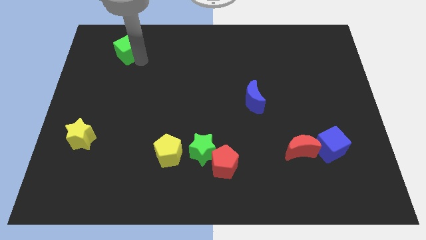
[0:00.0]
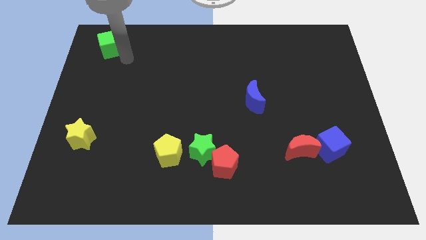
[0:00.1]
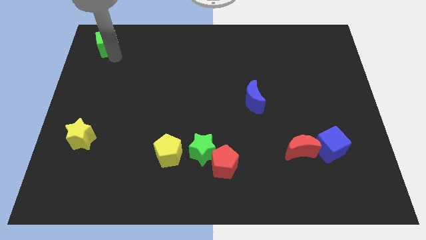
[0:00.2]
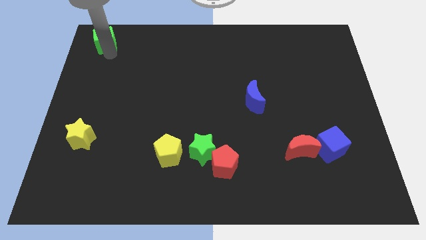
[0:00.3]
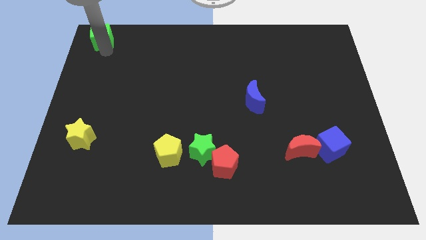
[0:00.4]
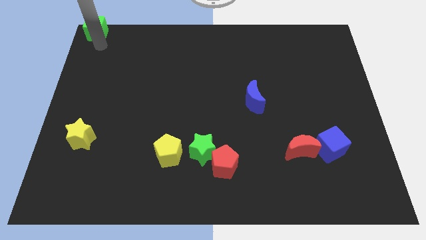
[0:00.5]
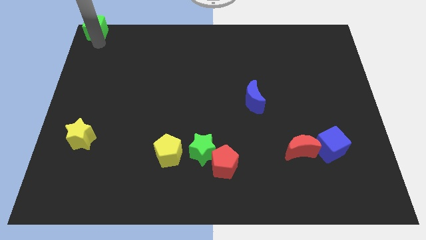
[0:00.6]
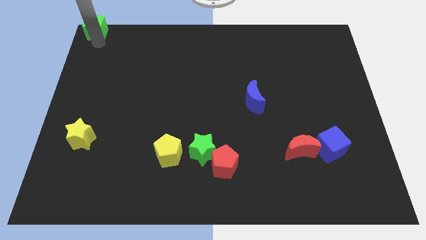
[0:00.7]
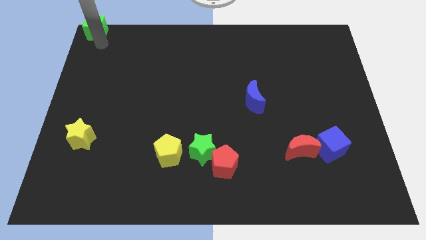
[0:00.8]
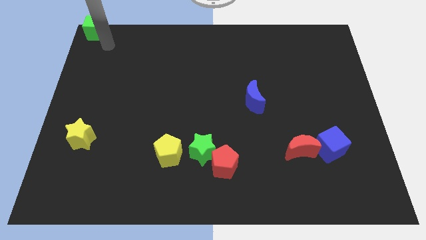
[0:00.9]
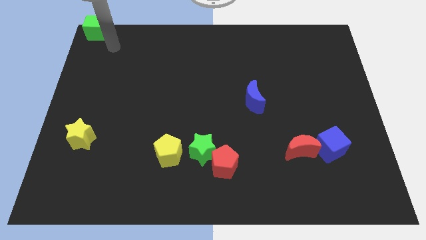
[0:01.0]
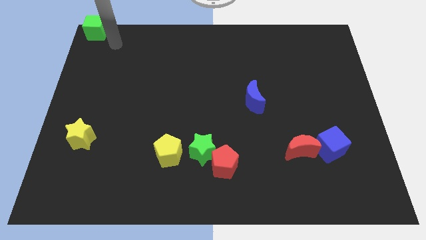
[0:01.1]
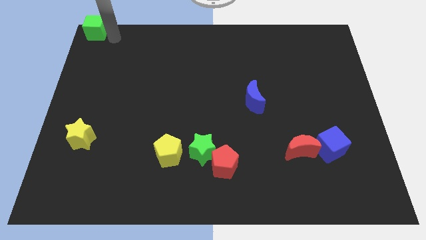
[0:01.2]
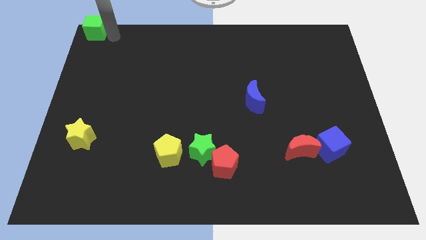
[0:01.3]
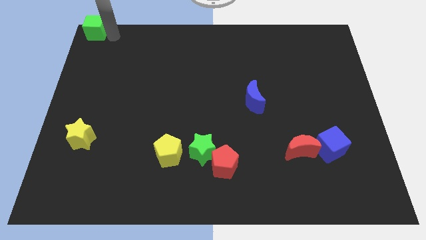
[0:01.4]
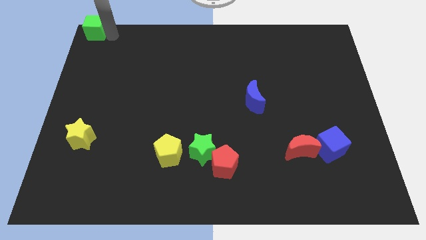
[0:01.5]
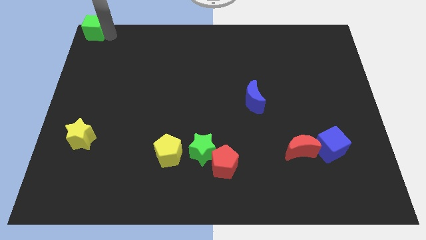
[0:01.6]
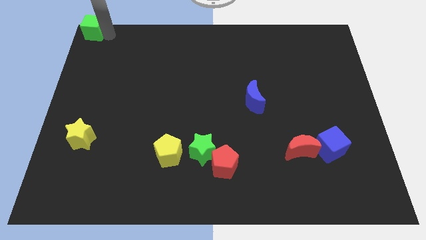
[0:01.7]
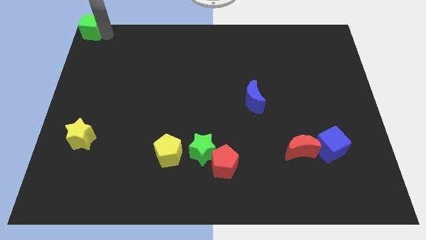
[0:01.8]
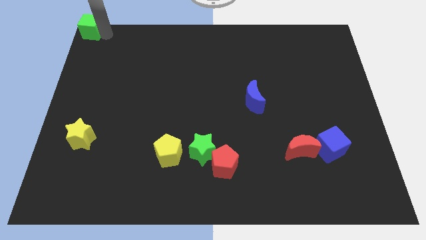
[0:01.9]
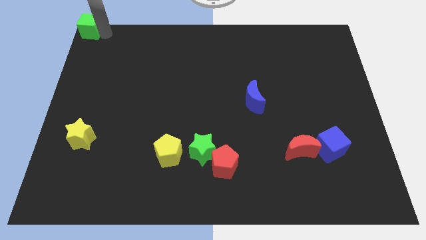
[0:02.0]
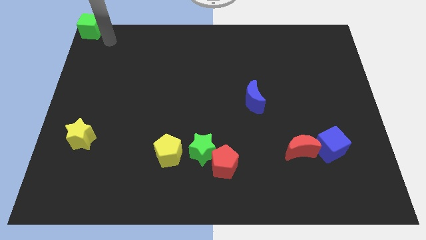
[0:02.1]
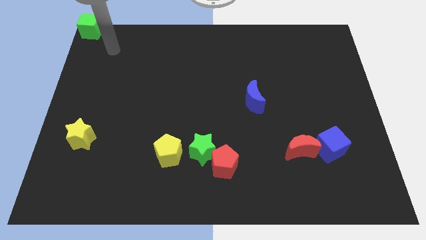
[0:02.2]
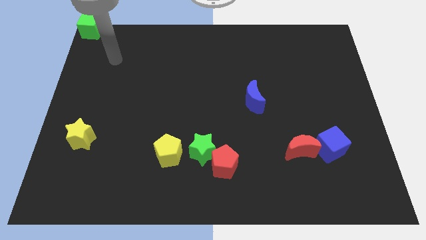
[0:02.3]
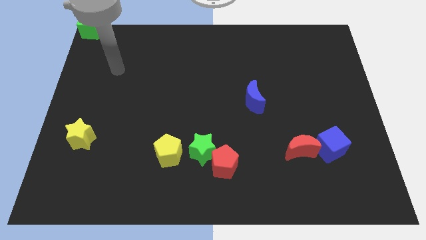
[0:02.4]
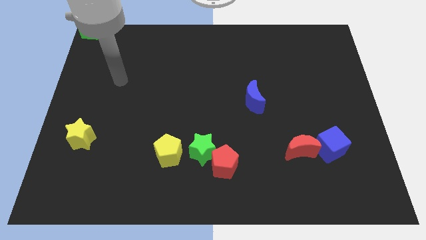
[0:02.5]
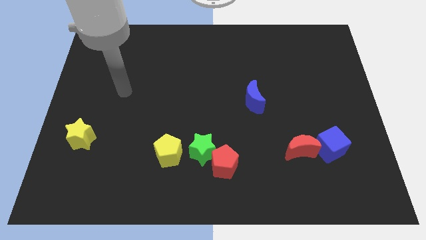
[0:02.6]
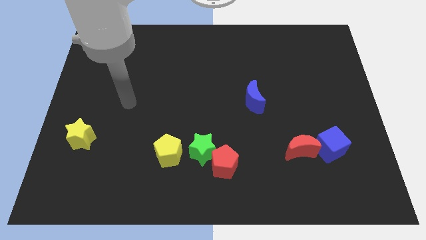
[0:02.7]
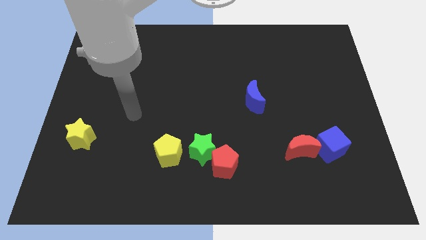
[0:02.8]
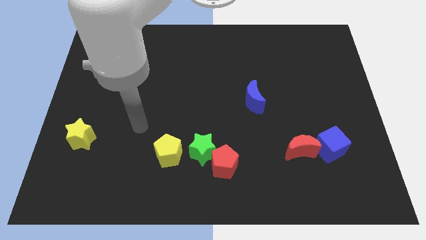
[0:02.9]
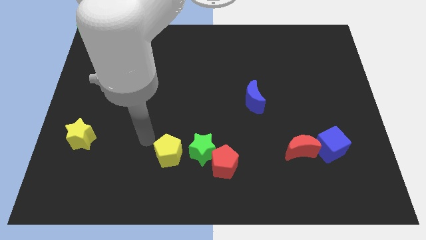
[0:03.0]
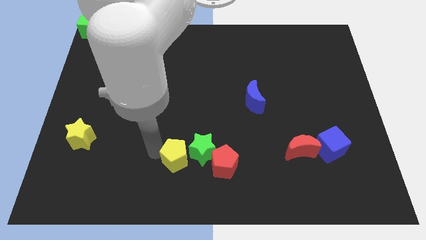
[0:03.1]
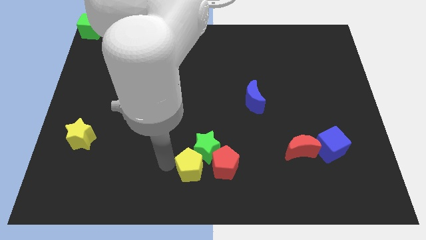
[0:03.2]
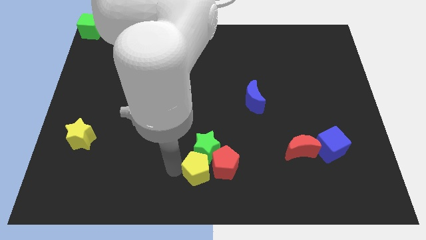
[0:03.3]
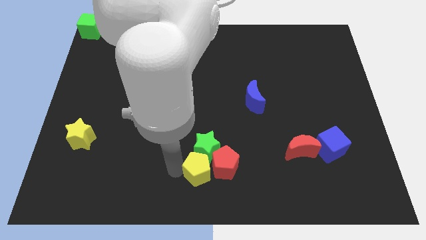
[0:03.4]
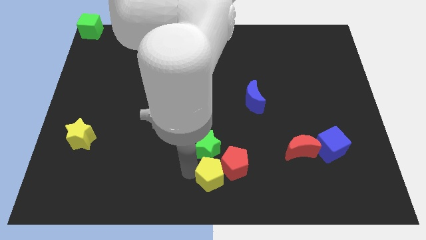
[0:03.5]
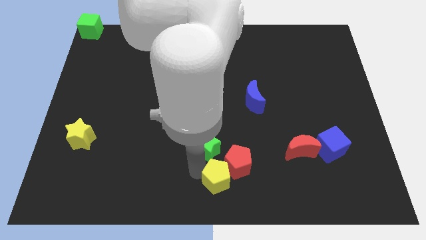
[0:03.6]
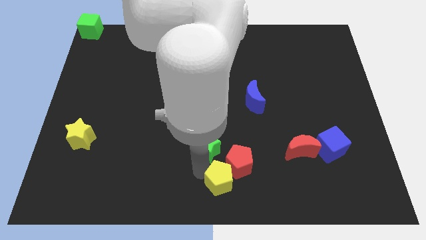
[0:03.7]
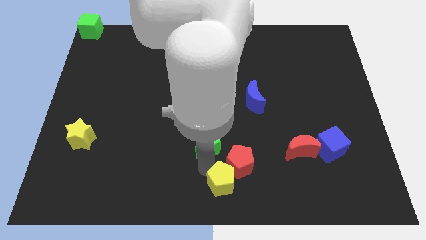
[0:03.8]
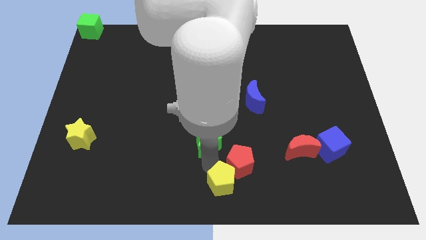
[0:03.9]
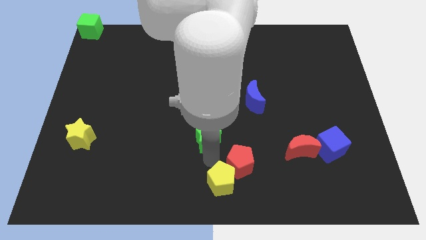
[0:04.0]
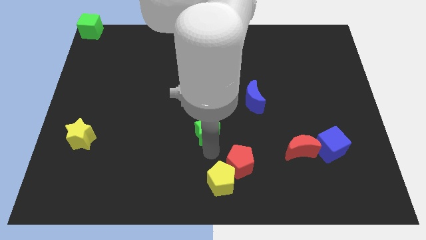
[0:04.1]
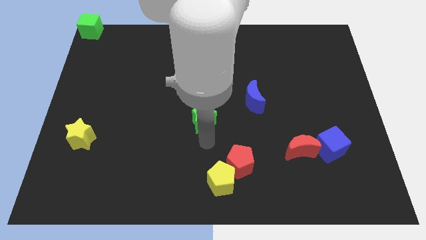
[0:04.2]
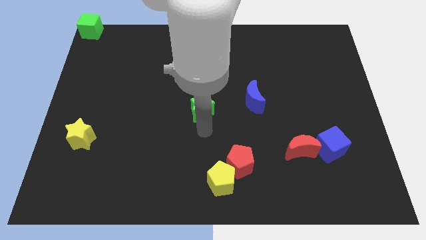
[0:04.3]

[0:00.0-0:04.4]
separate the green star from red pentagon and yellow pentagon

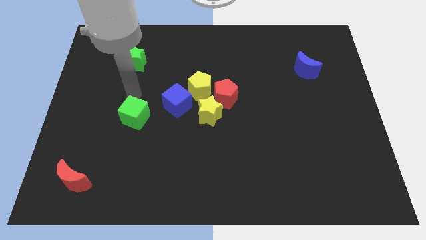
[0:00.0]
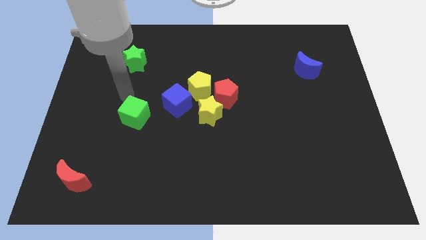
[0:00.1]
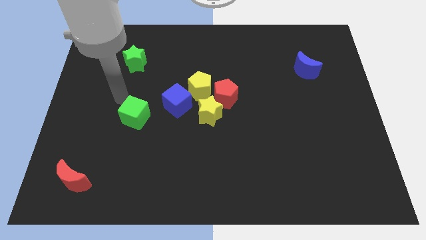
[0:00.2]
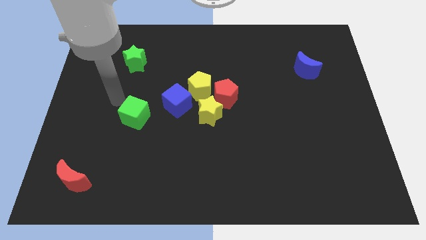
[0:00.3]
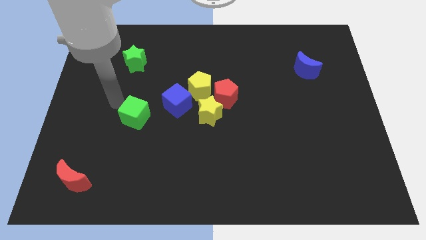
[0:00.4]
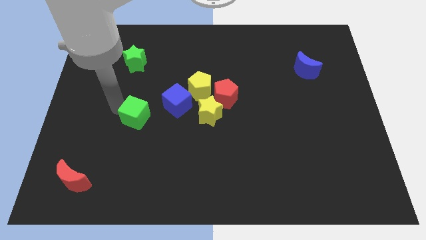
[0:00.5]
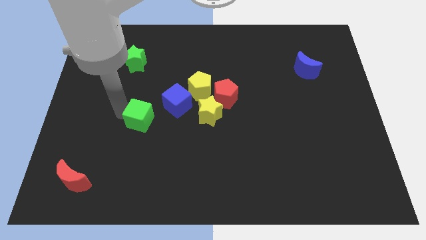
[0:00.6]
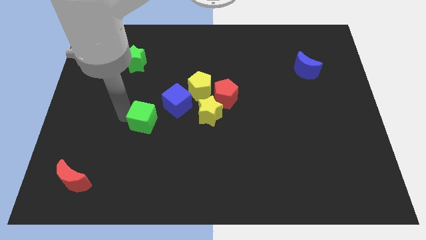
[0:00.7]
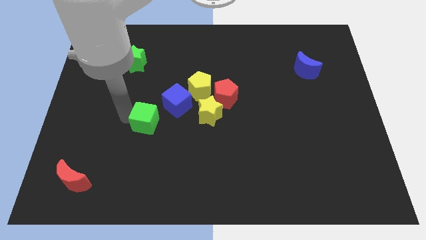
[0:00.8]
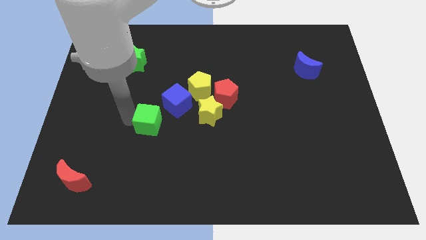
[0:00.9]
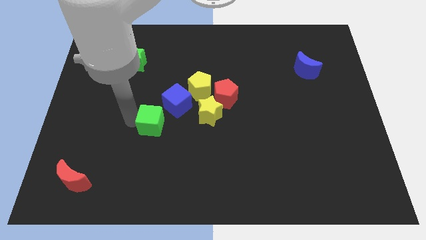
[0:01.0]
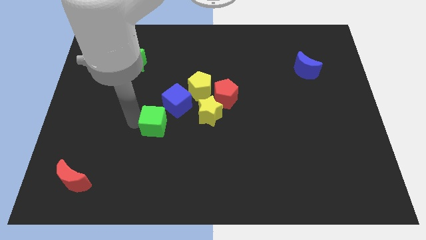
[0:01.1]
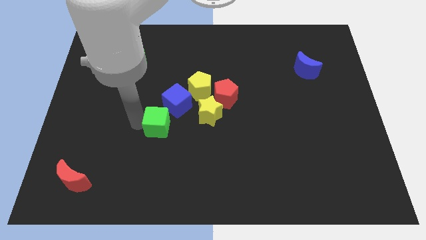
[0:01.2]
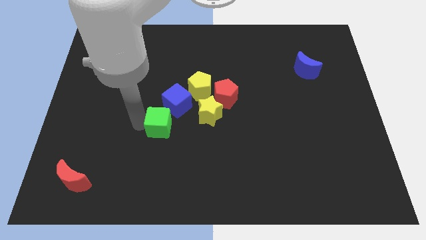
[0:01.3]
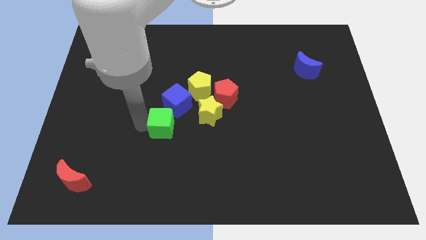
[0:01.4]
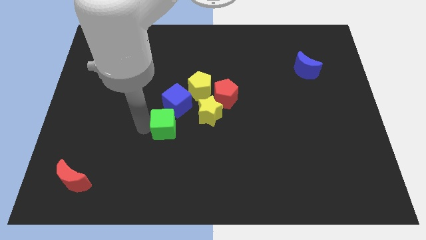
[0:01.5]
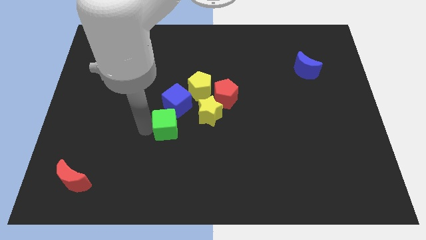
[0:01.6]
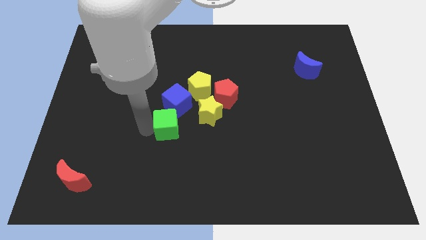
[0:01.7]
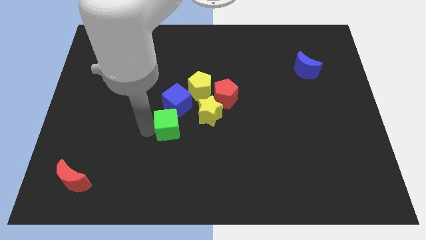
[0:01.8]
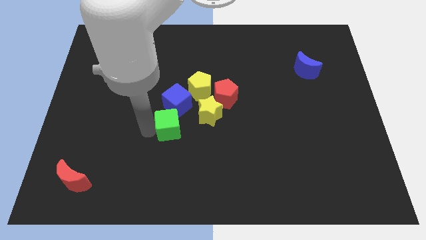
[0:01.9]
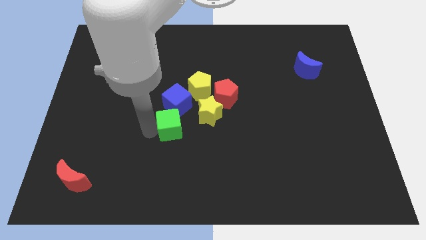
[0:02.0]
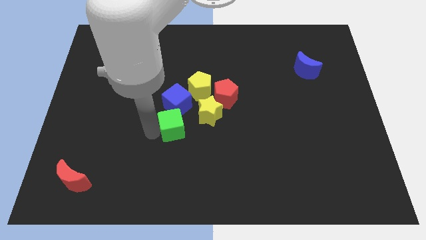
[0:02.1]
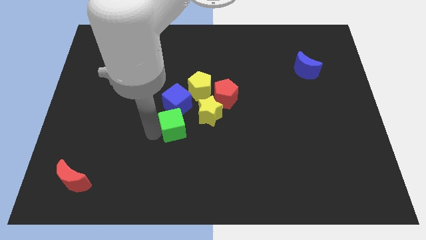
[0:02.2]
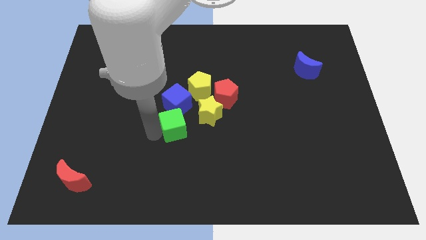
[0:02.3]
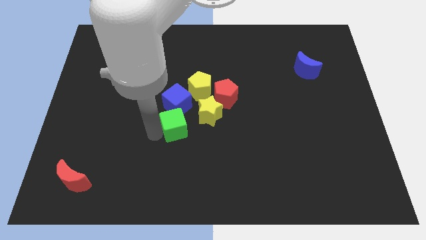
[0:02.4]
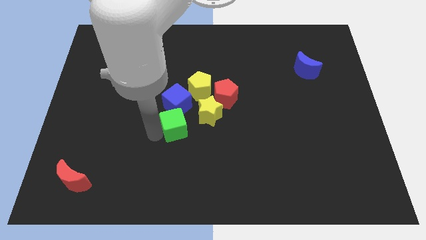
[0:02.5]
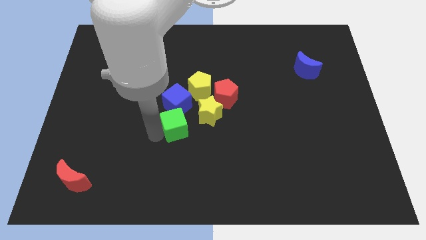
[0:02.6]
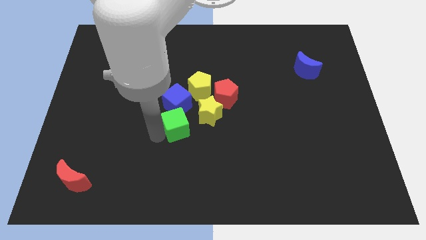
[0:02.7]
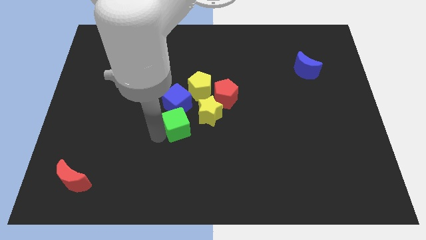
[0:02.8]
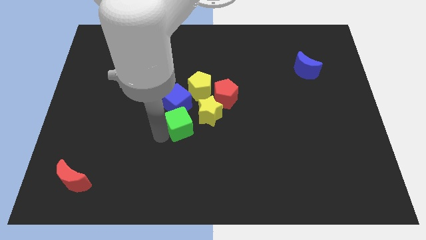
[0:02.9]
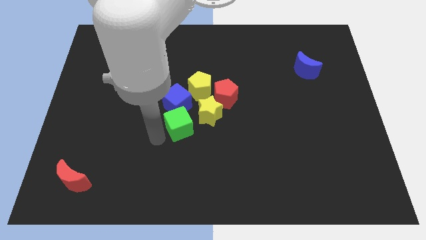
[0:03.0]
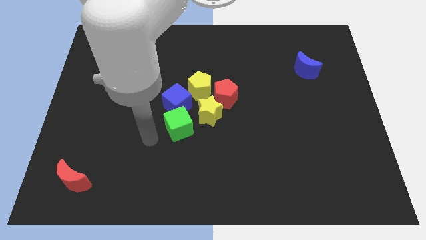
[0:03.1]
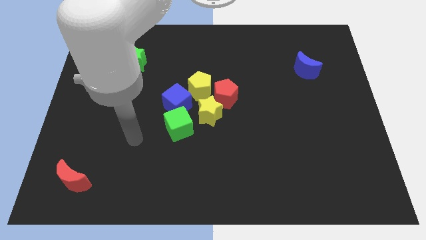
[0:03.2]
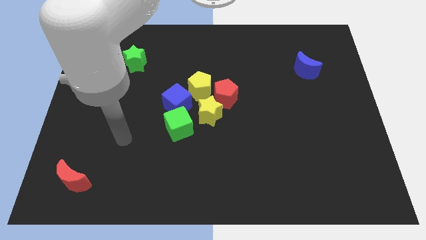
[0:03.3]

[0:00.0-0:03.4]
move the green cube to the bottom of the blue cube

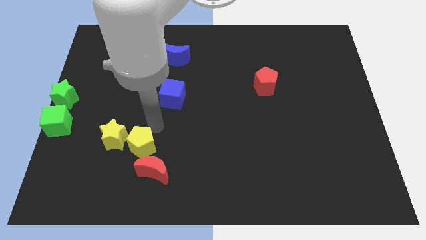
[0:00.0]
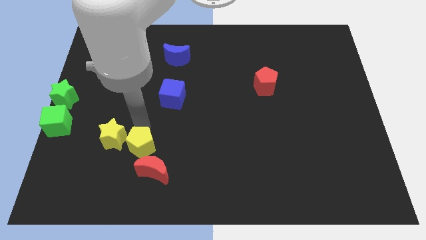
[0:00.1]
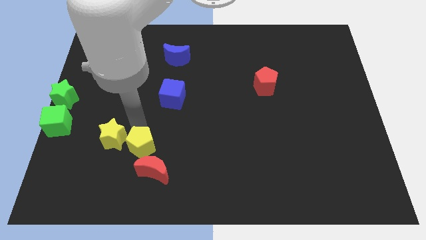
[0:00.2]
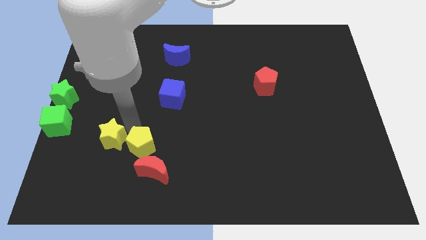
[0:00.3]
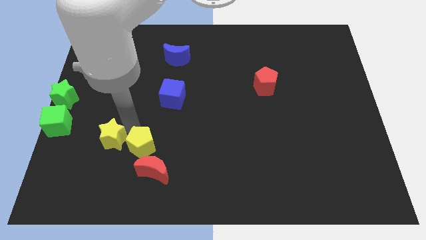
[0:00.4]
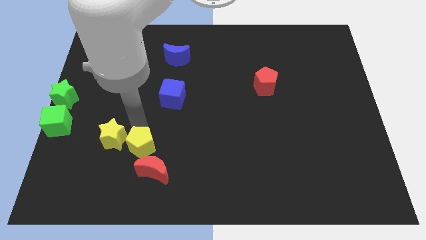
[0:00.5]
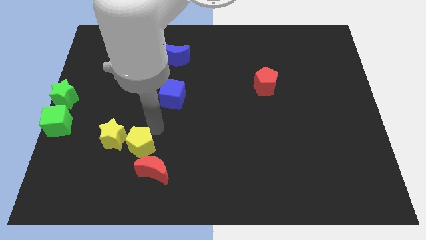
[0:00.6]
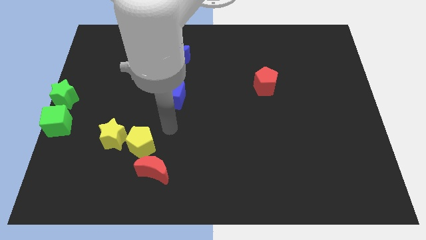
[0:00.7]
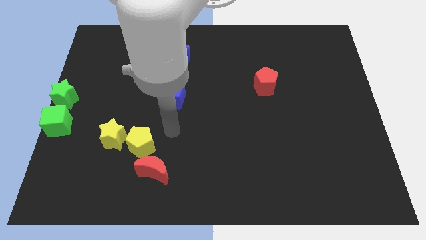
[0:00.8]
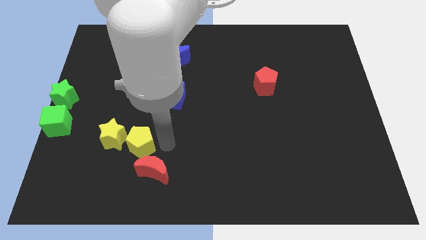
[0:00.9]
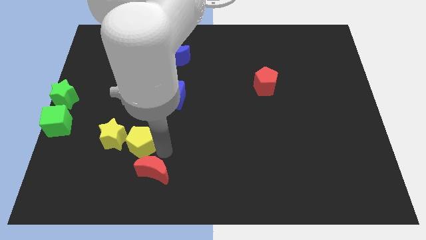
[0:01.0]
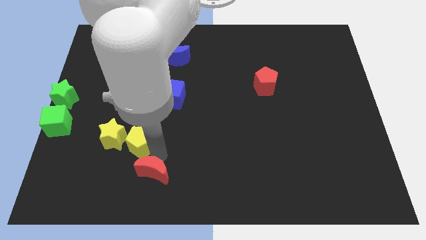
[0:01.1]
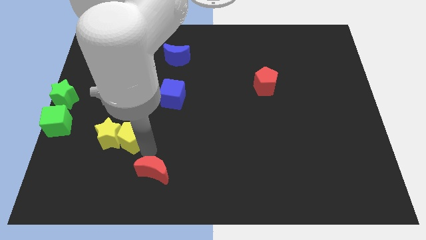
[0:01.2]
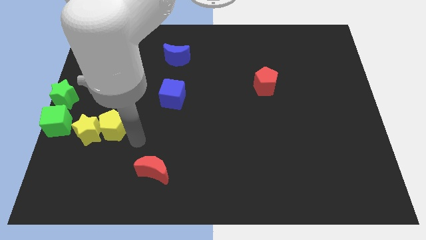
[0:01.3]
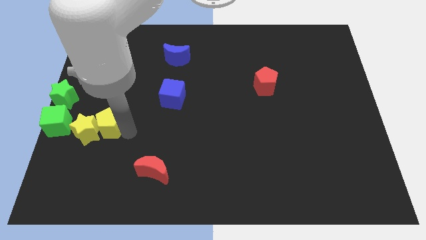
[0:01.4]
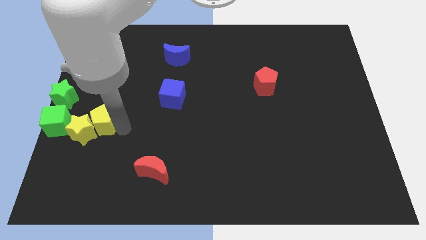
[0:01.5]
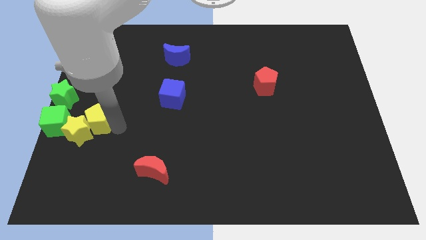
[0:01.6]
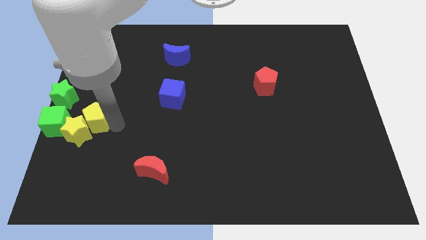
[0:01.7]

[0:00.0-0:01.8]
move the yellow things into the right side of the green cube
